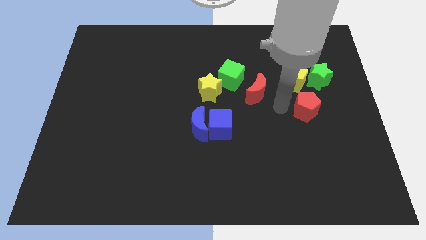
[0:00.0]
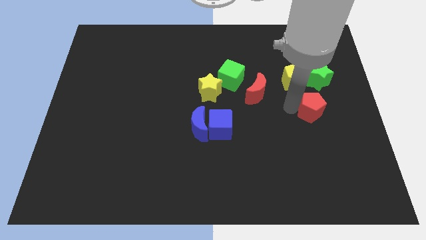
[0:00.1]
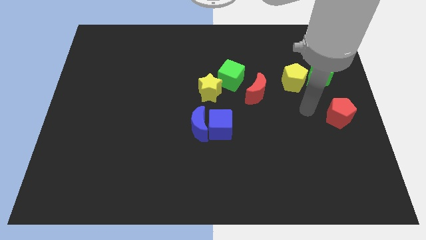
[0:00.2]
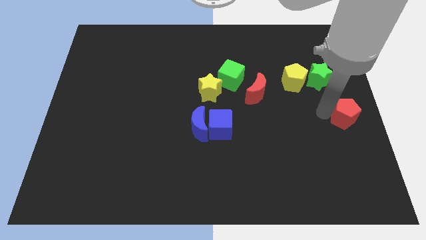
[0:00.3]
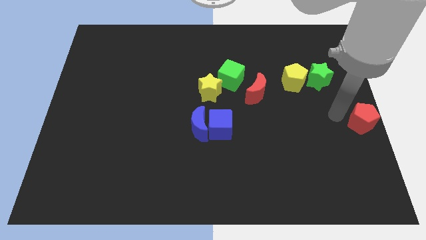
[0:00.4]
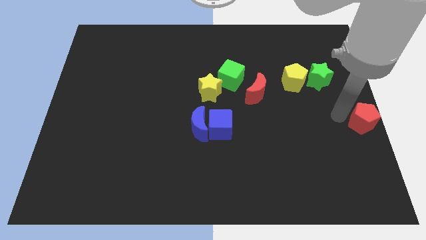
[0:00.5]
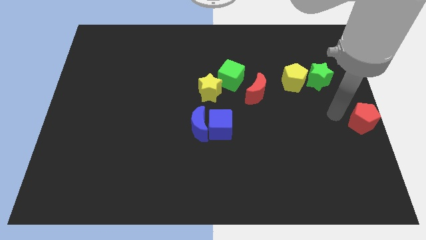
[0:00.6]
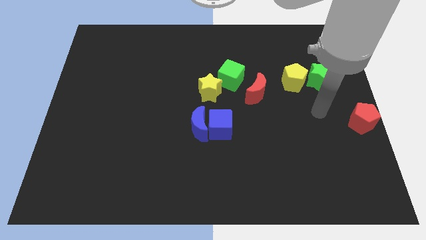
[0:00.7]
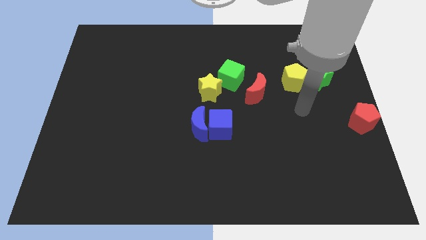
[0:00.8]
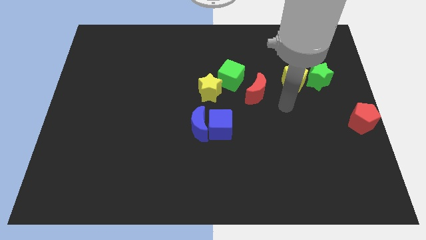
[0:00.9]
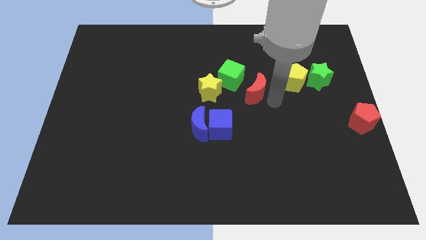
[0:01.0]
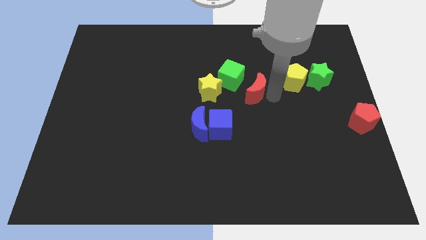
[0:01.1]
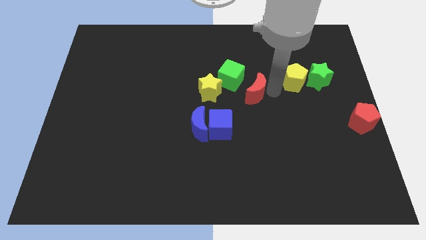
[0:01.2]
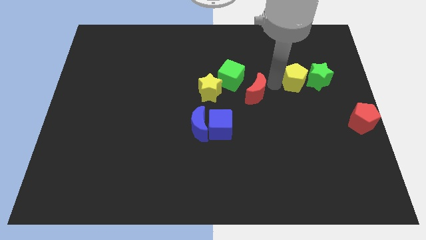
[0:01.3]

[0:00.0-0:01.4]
push the red pentagon to the right center

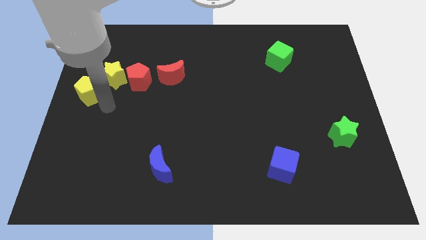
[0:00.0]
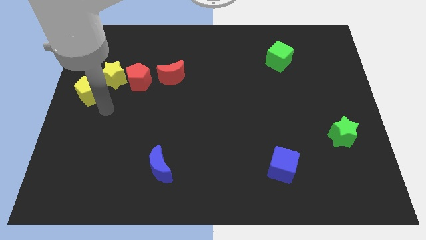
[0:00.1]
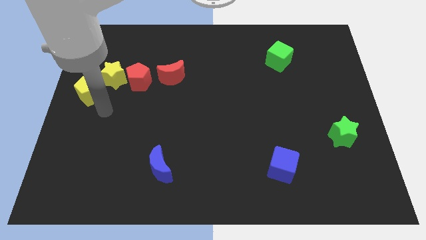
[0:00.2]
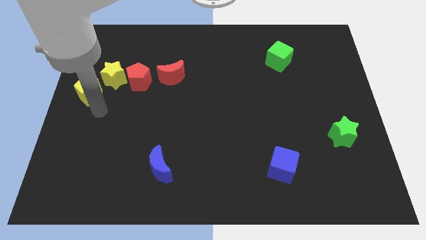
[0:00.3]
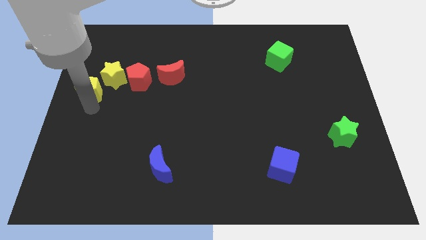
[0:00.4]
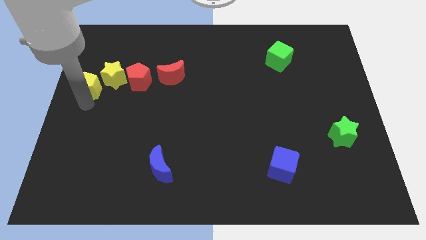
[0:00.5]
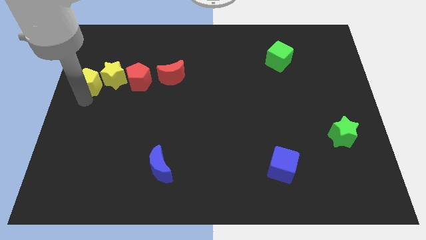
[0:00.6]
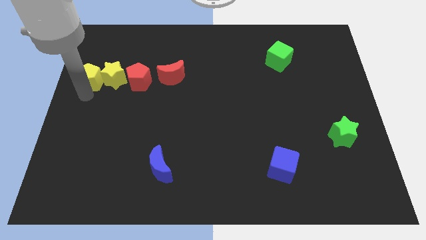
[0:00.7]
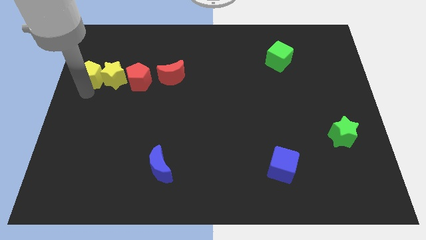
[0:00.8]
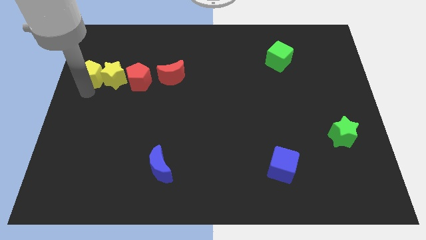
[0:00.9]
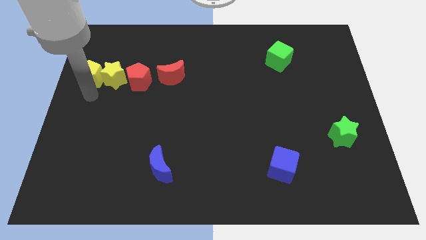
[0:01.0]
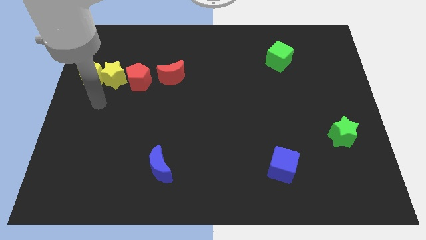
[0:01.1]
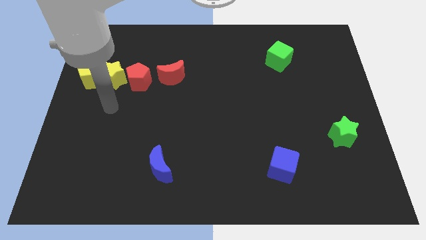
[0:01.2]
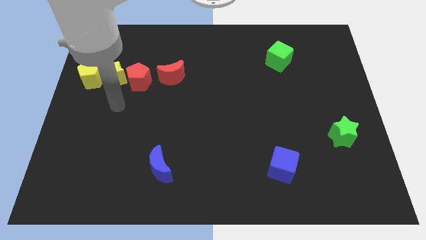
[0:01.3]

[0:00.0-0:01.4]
push the yellow pentagon to the left of yellow star

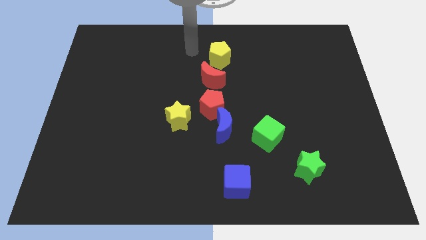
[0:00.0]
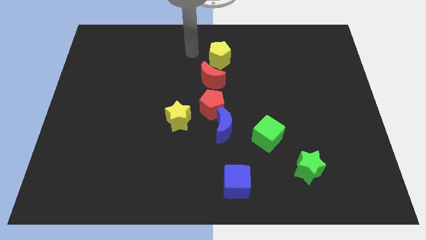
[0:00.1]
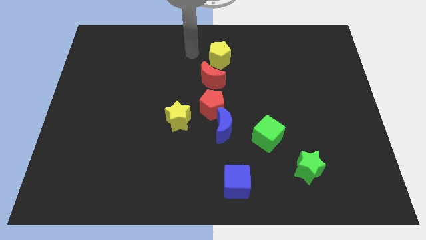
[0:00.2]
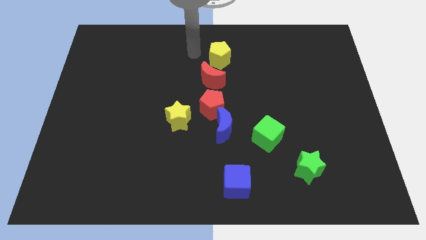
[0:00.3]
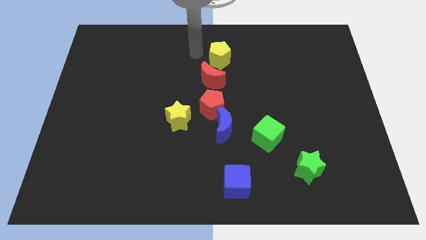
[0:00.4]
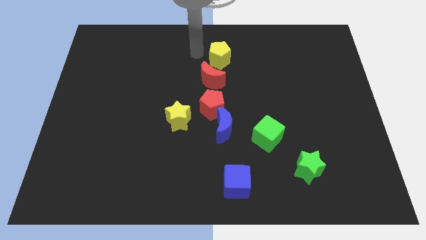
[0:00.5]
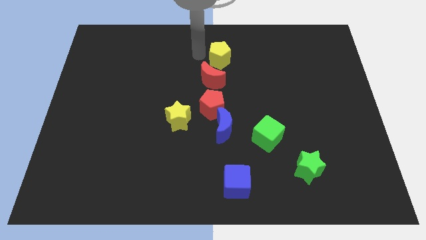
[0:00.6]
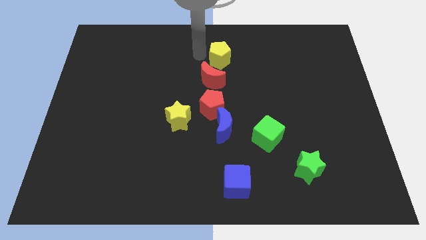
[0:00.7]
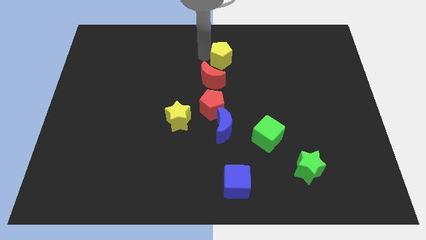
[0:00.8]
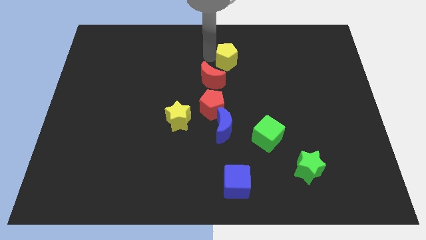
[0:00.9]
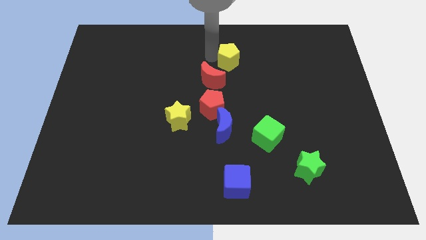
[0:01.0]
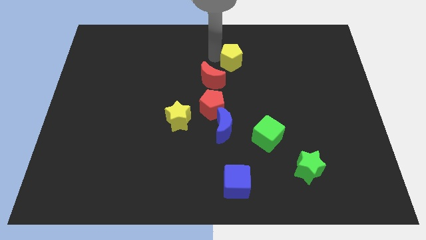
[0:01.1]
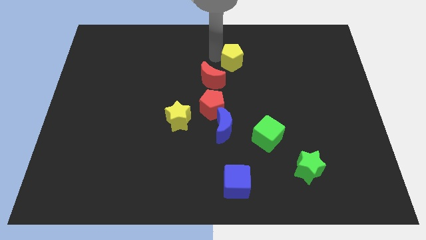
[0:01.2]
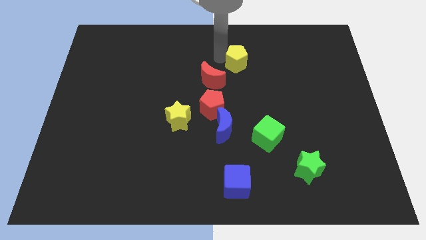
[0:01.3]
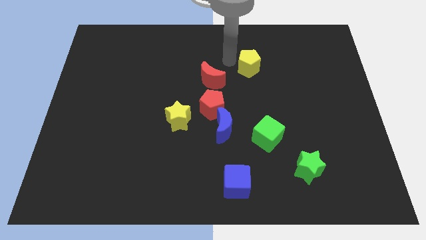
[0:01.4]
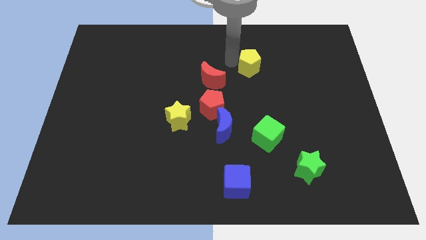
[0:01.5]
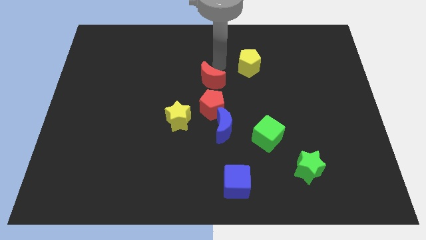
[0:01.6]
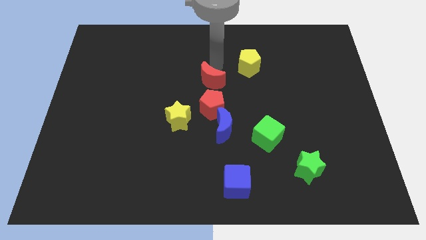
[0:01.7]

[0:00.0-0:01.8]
push the yellow pentagon towards the right side of the board

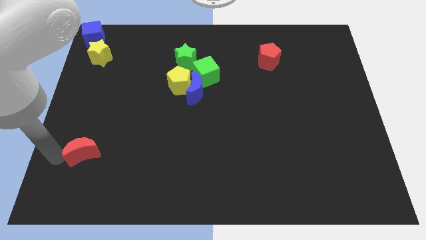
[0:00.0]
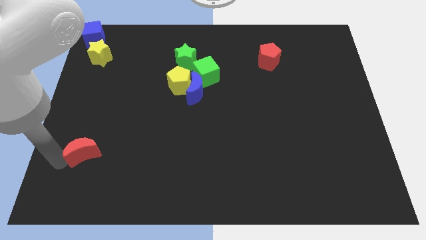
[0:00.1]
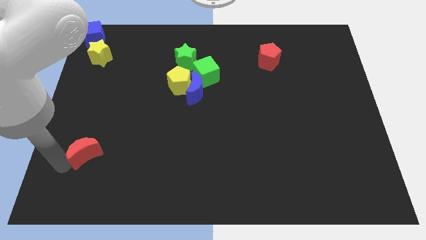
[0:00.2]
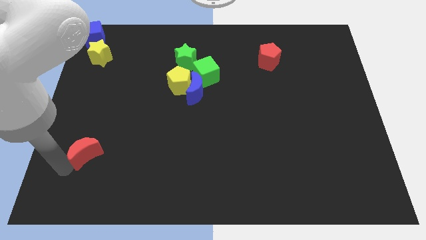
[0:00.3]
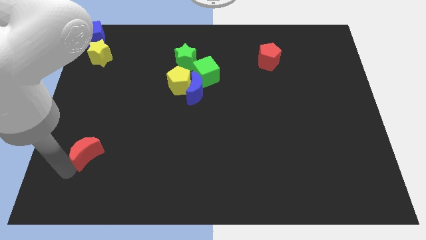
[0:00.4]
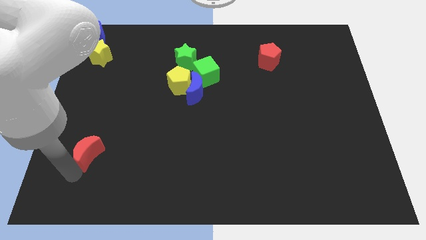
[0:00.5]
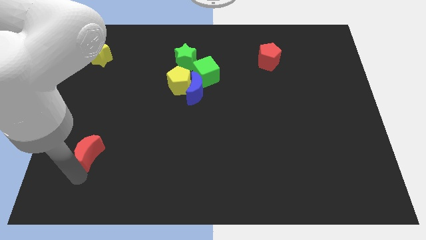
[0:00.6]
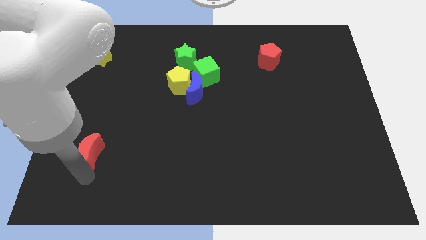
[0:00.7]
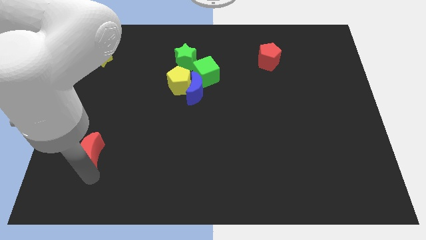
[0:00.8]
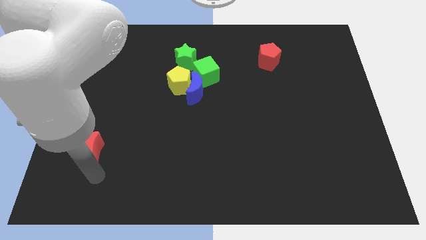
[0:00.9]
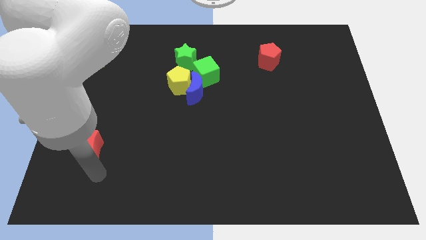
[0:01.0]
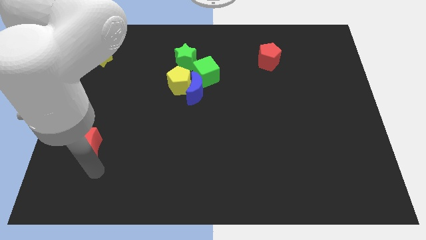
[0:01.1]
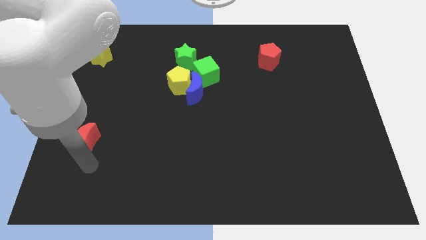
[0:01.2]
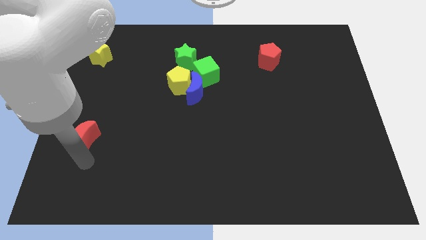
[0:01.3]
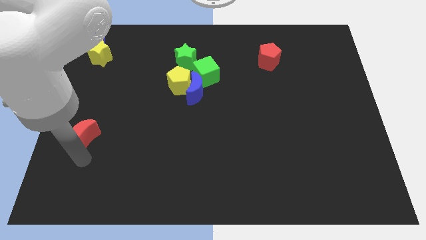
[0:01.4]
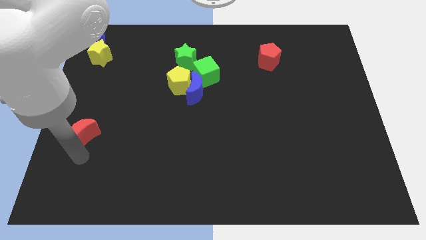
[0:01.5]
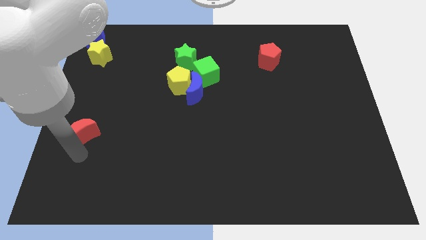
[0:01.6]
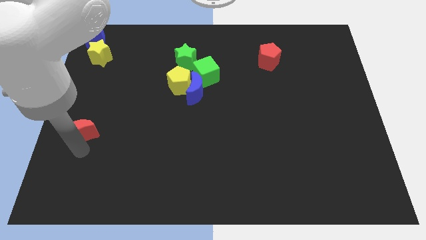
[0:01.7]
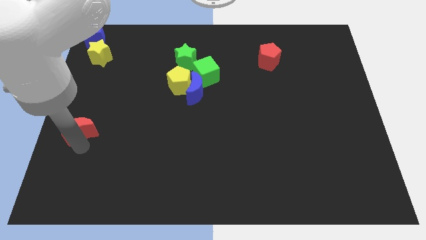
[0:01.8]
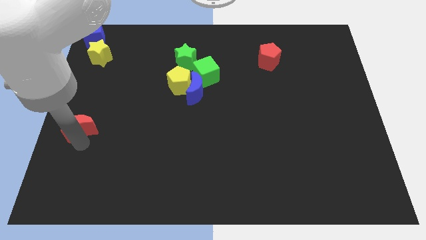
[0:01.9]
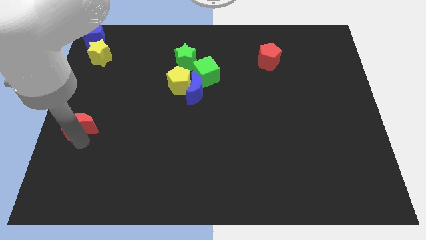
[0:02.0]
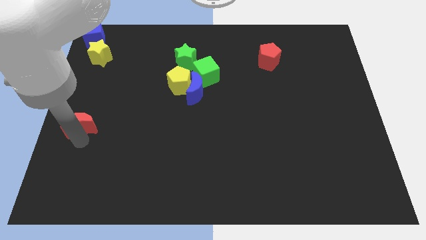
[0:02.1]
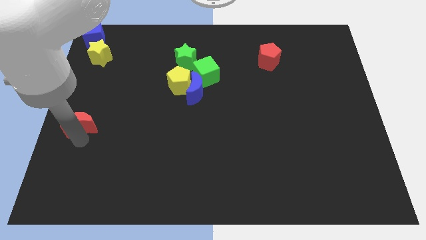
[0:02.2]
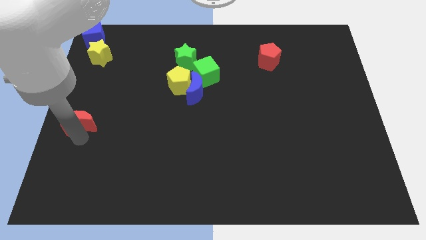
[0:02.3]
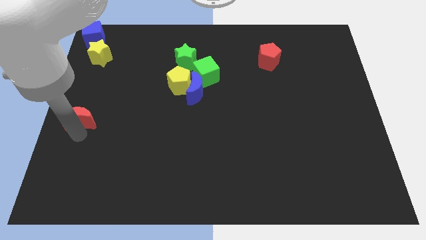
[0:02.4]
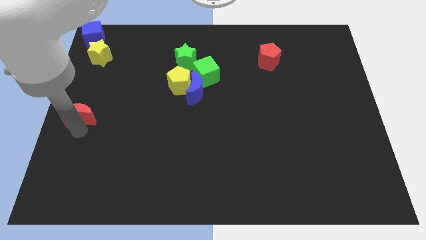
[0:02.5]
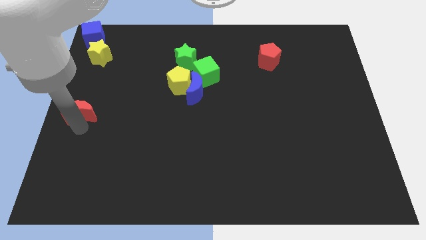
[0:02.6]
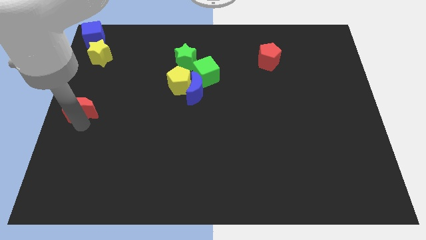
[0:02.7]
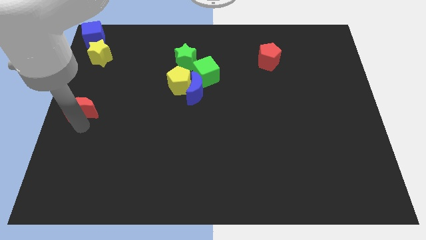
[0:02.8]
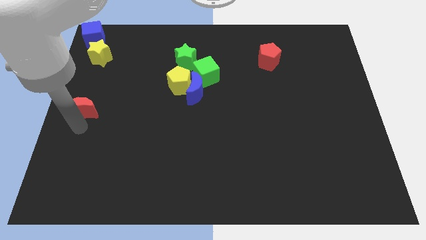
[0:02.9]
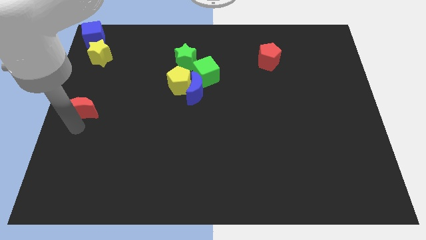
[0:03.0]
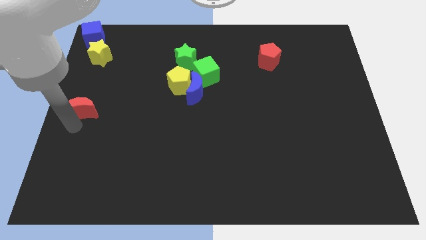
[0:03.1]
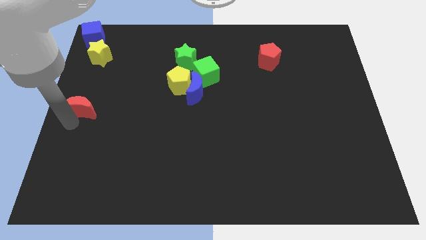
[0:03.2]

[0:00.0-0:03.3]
move red moon at center left

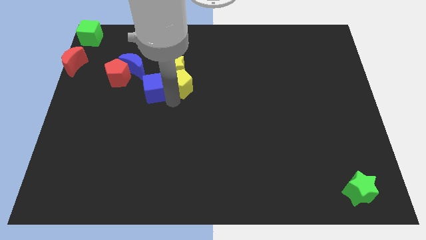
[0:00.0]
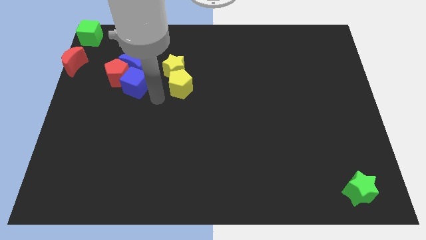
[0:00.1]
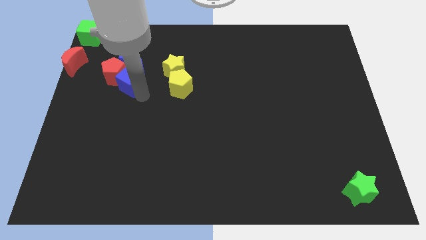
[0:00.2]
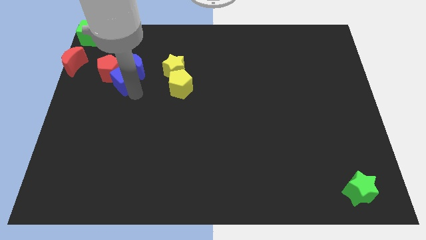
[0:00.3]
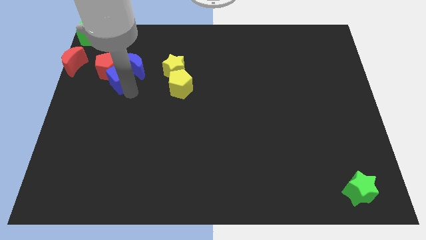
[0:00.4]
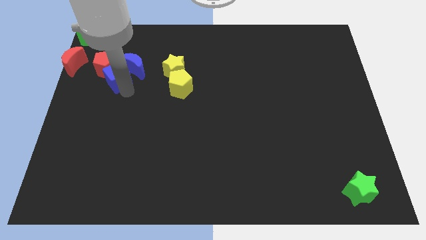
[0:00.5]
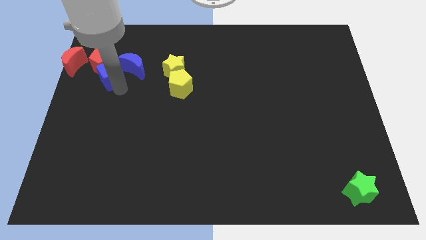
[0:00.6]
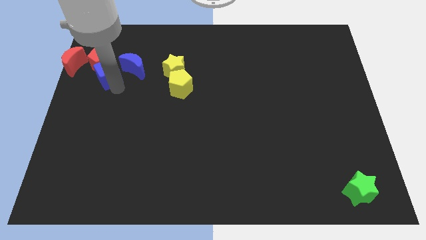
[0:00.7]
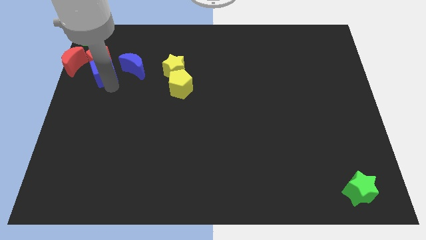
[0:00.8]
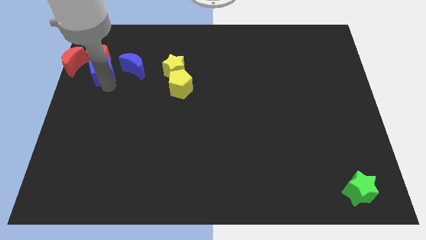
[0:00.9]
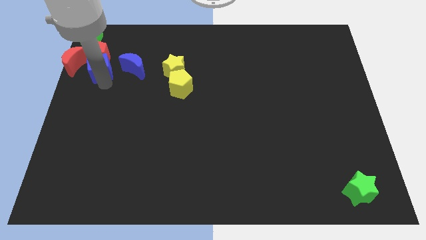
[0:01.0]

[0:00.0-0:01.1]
push the blue cube into the red pentagon
